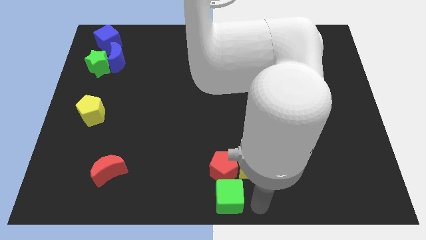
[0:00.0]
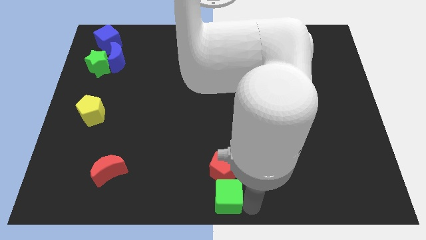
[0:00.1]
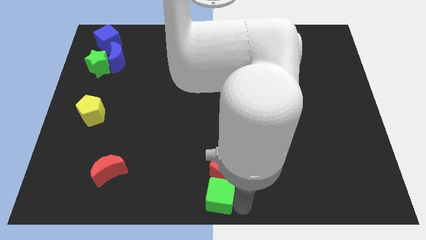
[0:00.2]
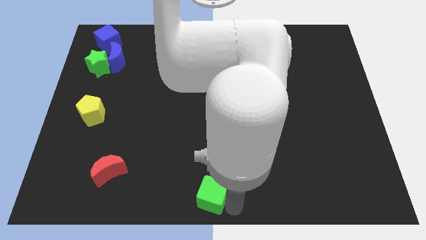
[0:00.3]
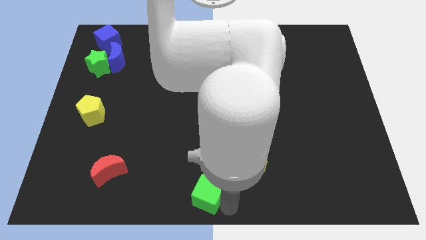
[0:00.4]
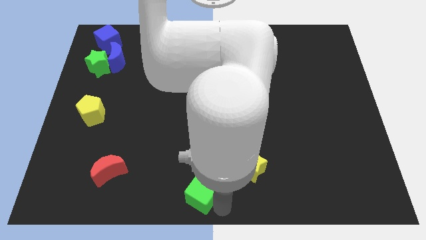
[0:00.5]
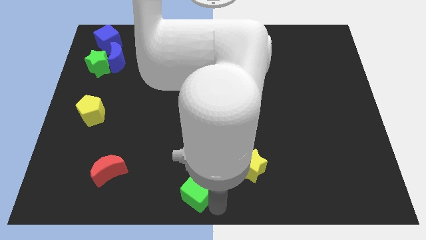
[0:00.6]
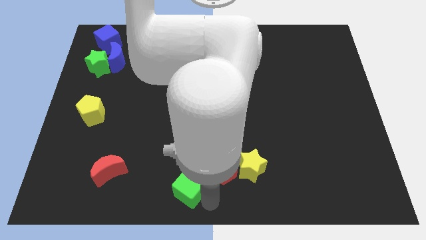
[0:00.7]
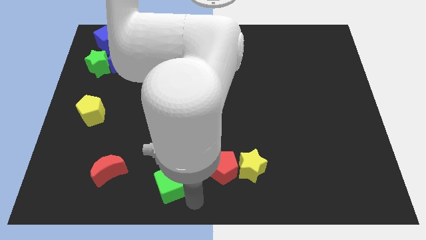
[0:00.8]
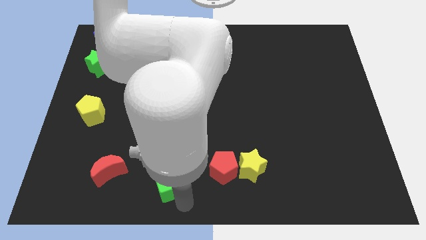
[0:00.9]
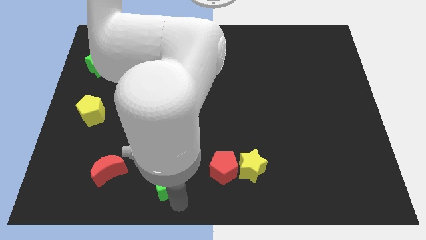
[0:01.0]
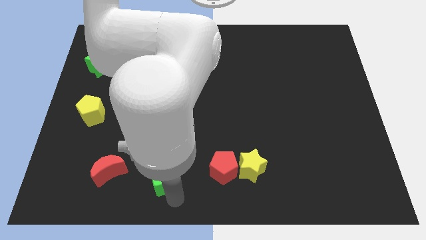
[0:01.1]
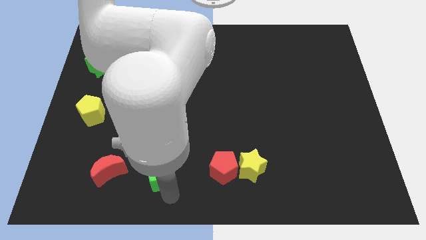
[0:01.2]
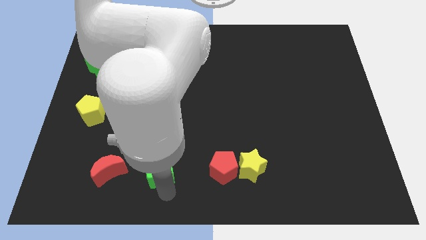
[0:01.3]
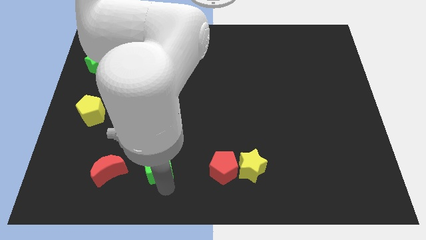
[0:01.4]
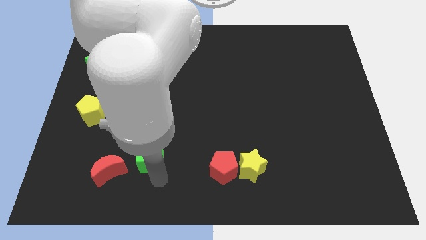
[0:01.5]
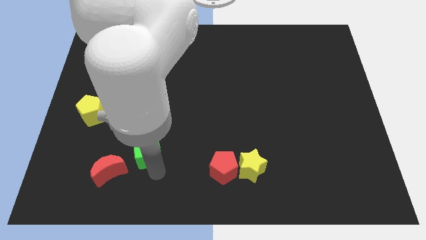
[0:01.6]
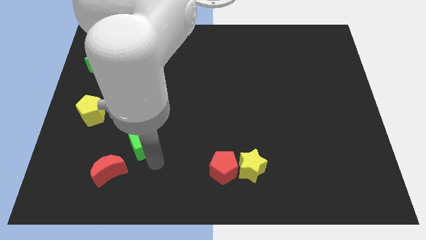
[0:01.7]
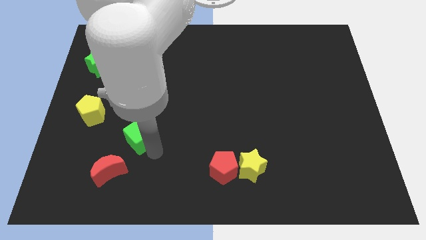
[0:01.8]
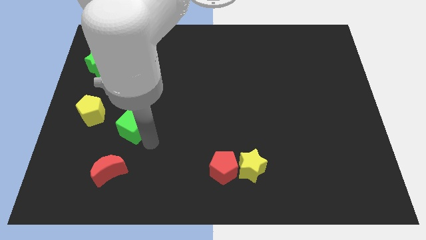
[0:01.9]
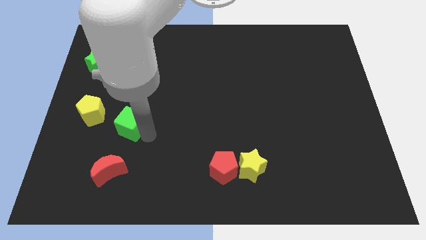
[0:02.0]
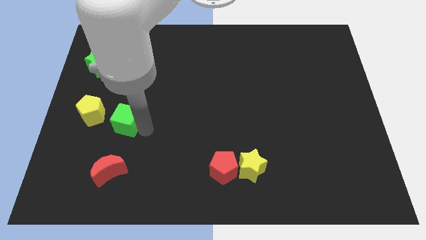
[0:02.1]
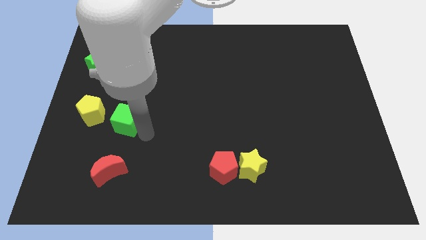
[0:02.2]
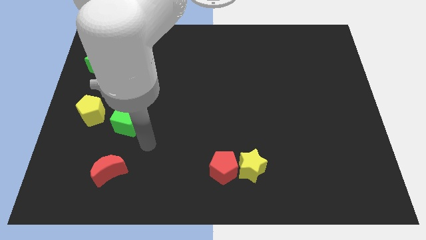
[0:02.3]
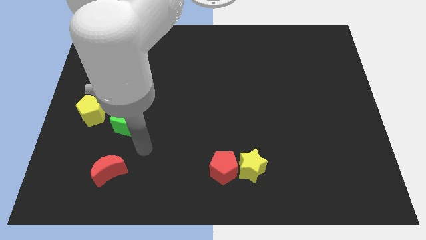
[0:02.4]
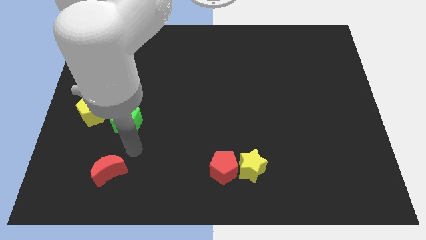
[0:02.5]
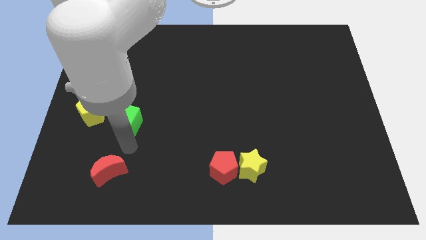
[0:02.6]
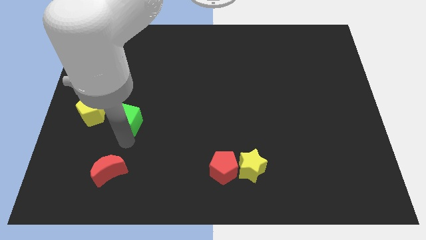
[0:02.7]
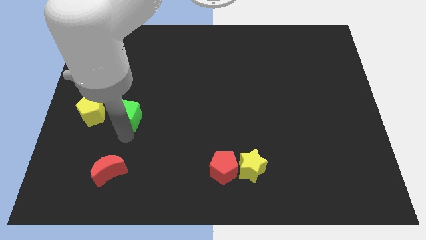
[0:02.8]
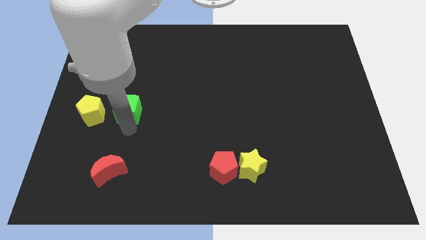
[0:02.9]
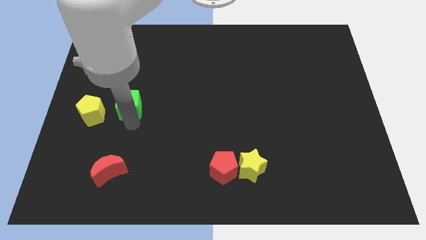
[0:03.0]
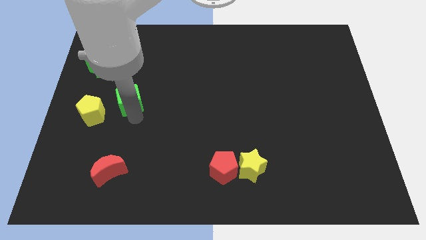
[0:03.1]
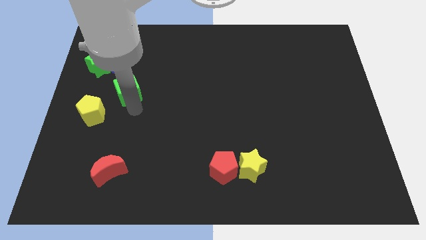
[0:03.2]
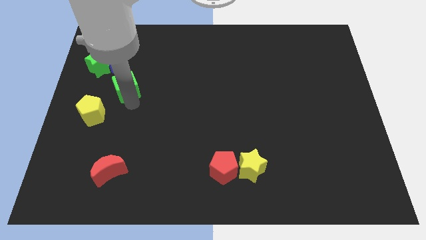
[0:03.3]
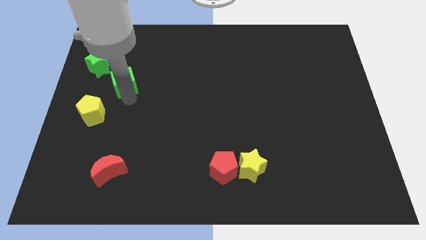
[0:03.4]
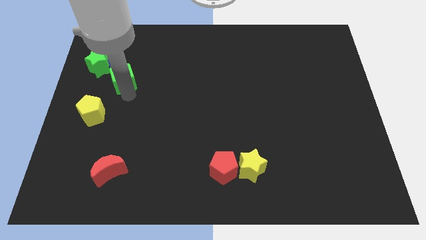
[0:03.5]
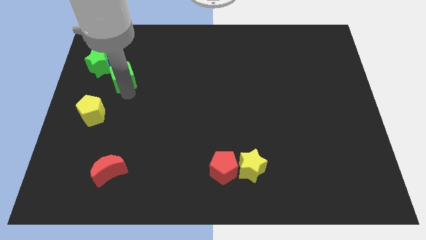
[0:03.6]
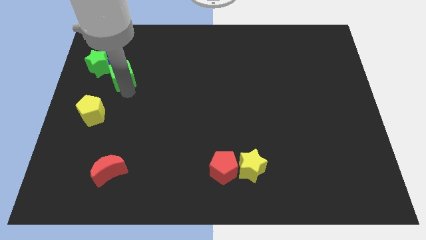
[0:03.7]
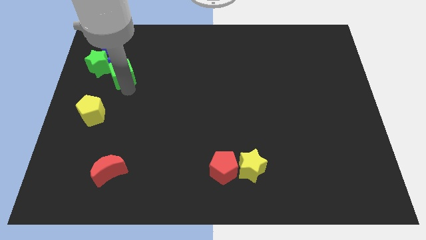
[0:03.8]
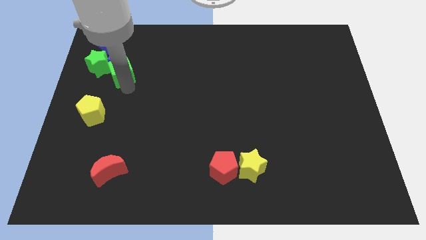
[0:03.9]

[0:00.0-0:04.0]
drag the green cube towards the group of blocks

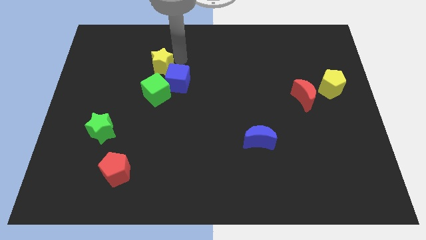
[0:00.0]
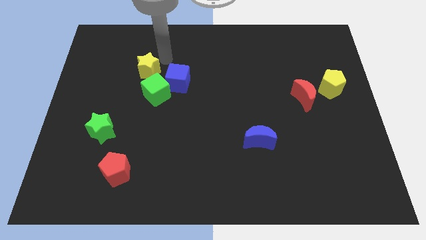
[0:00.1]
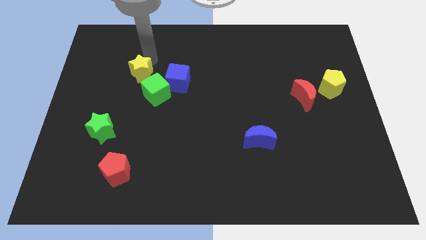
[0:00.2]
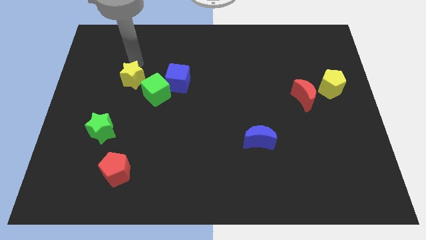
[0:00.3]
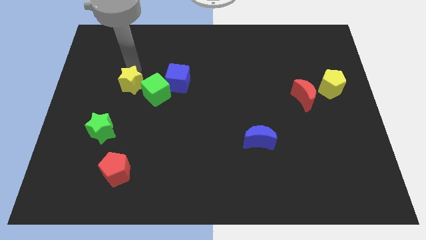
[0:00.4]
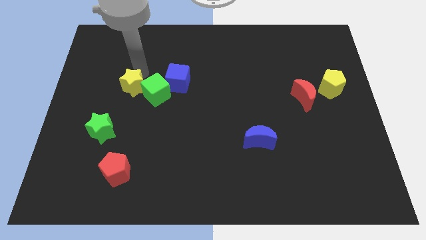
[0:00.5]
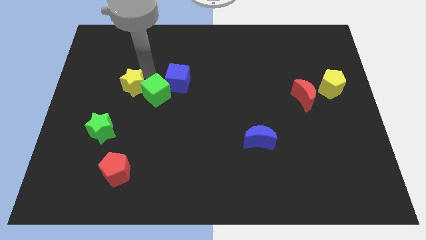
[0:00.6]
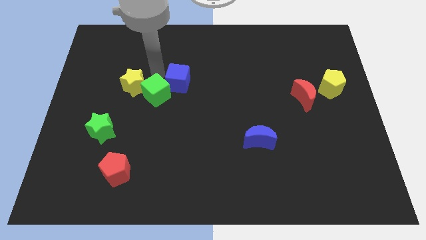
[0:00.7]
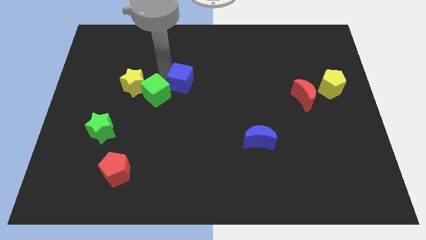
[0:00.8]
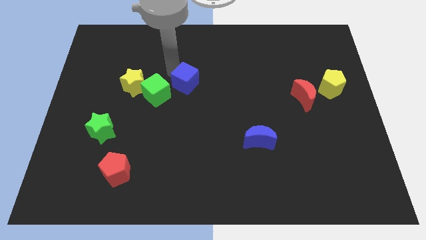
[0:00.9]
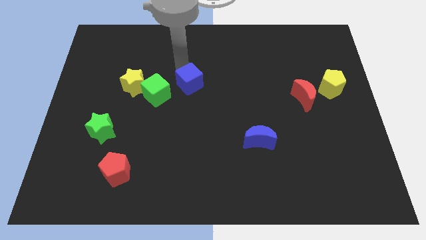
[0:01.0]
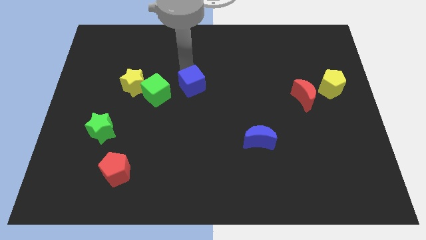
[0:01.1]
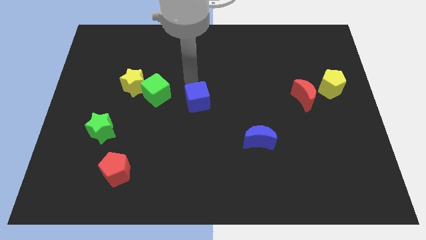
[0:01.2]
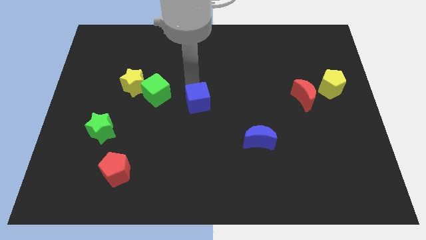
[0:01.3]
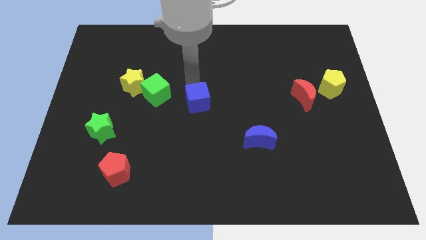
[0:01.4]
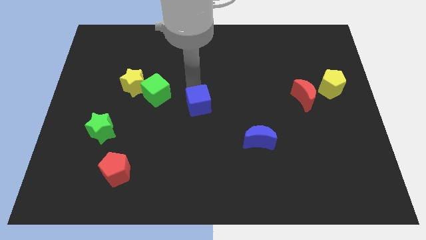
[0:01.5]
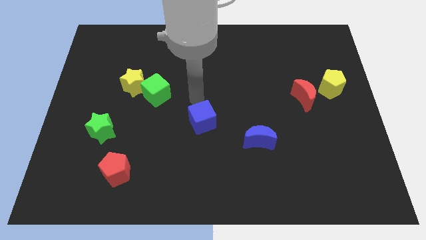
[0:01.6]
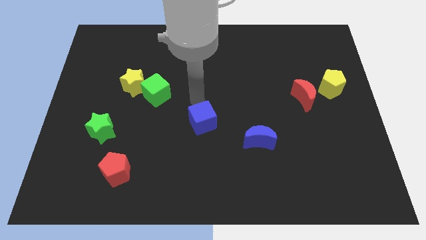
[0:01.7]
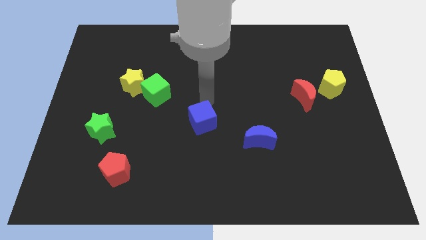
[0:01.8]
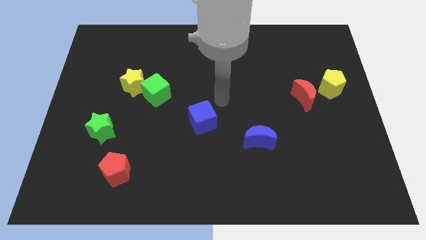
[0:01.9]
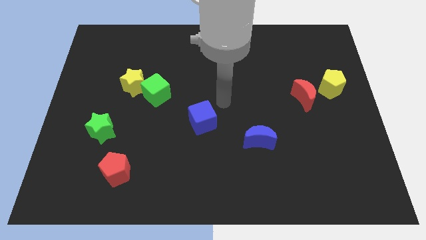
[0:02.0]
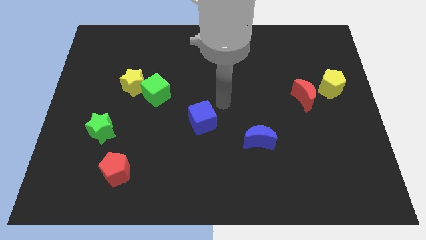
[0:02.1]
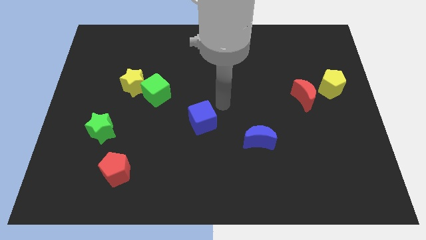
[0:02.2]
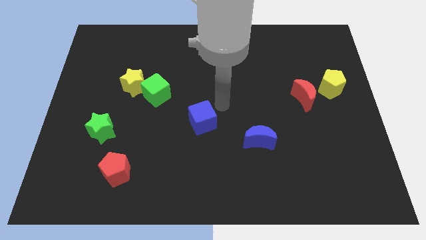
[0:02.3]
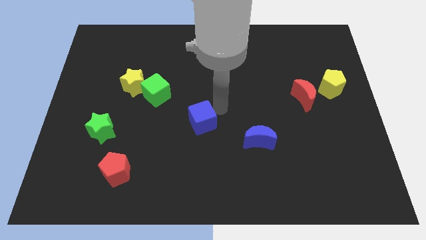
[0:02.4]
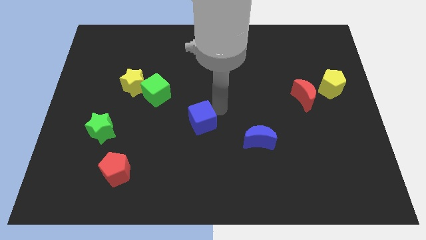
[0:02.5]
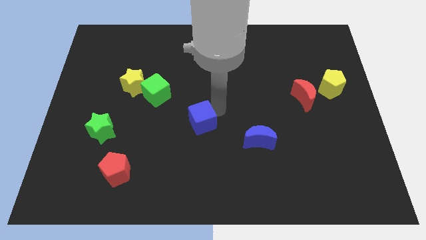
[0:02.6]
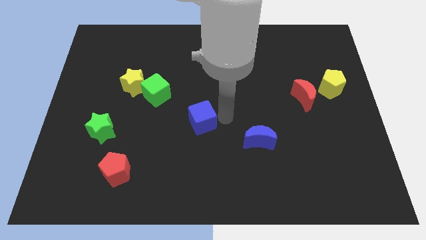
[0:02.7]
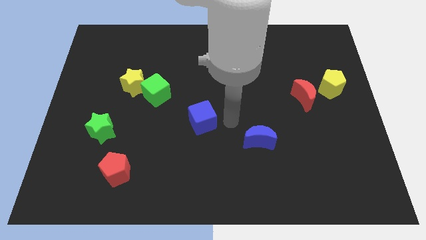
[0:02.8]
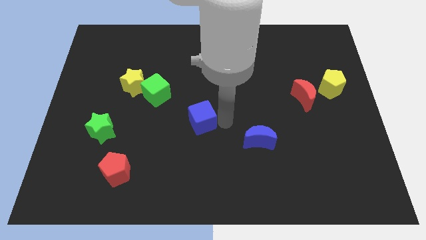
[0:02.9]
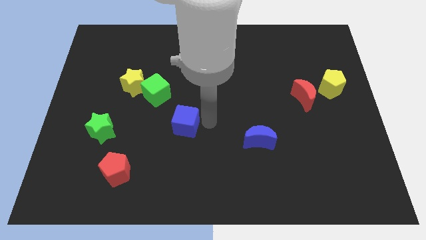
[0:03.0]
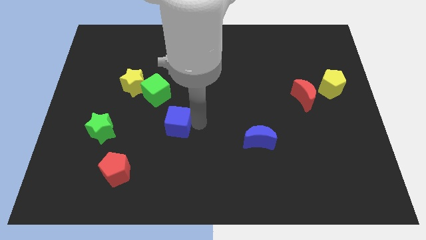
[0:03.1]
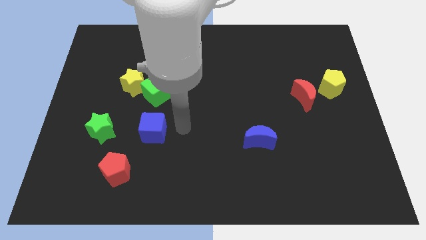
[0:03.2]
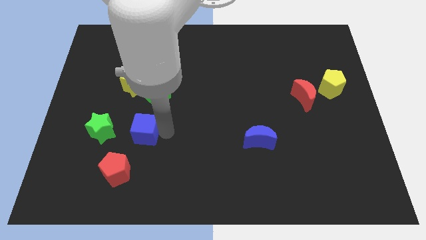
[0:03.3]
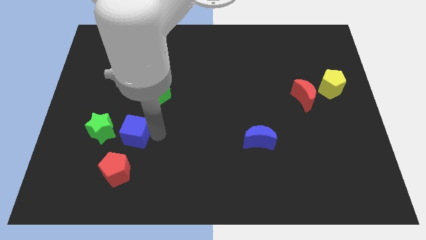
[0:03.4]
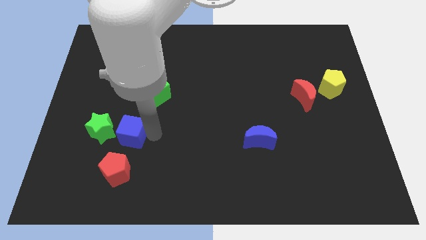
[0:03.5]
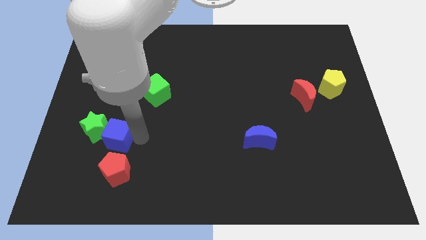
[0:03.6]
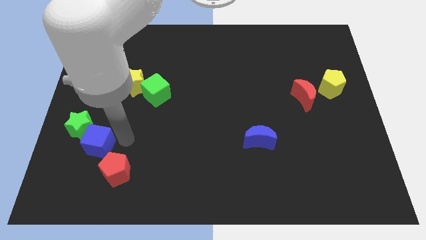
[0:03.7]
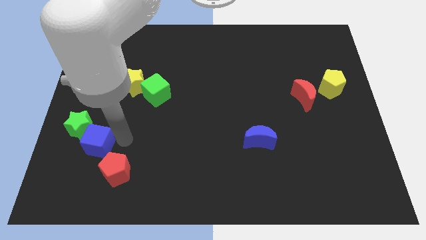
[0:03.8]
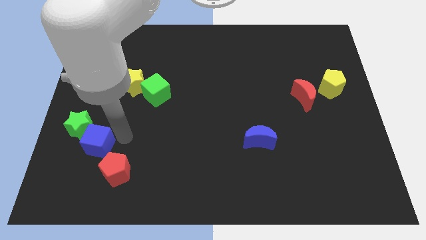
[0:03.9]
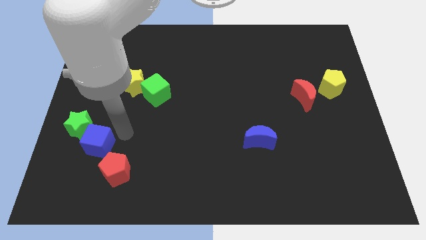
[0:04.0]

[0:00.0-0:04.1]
push blue cube in between green star and red pentagon

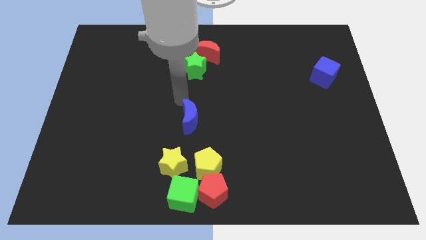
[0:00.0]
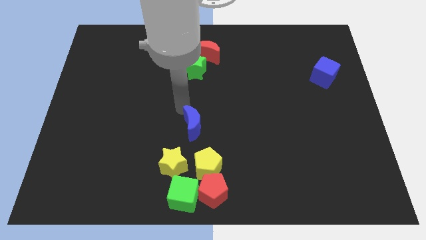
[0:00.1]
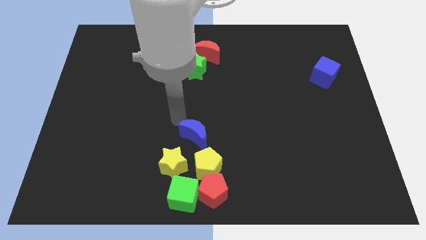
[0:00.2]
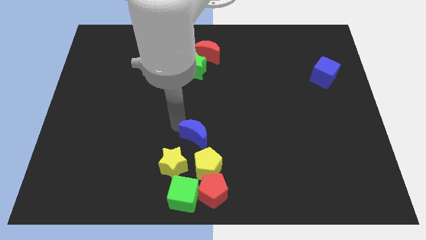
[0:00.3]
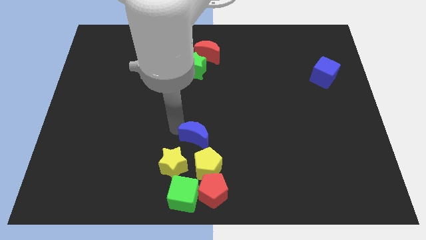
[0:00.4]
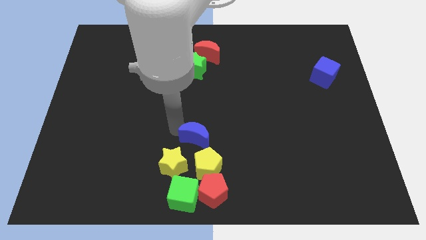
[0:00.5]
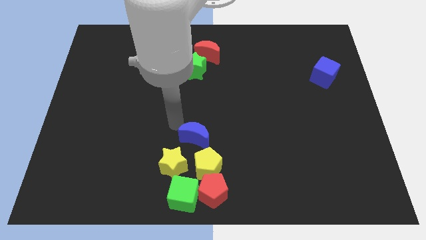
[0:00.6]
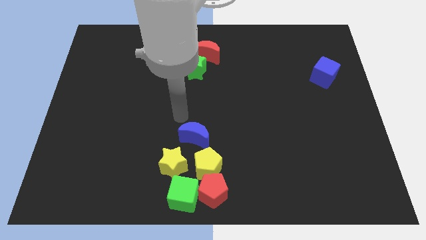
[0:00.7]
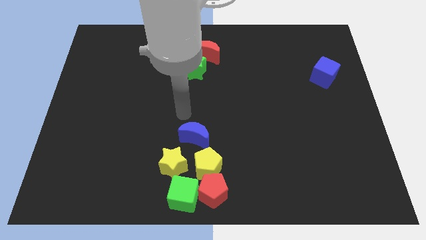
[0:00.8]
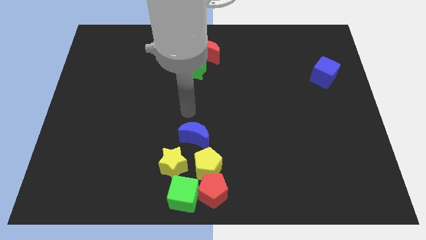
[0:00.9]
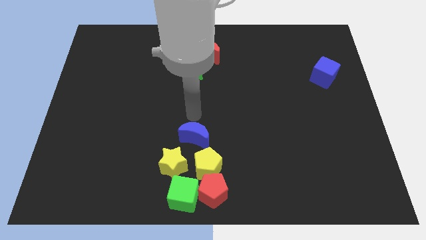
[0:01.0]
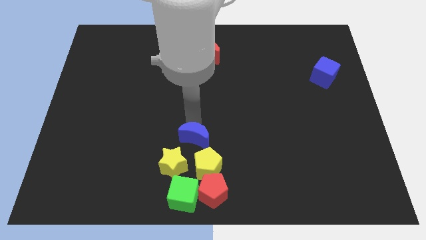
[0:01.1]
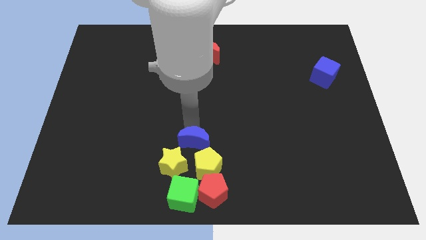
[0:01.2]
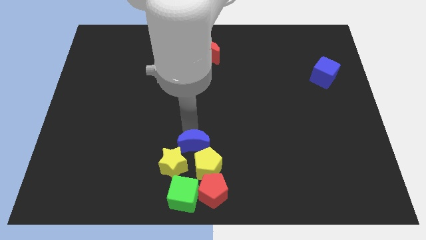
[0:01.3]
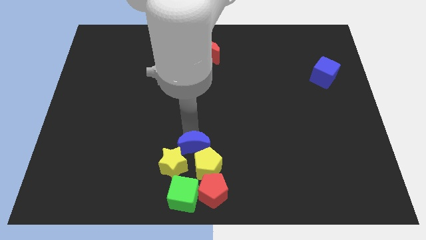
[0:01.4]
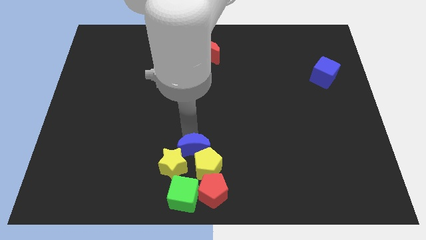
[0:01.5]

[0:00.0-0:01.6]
drag the blue moon into the yellow blocks
